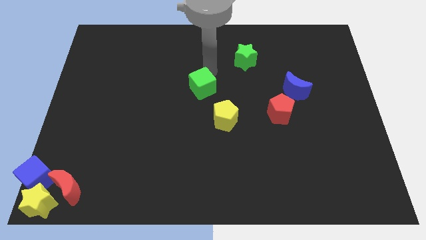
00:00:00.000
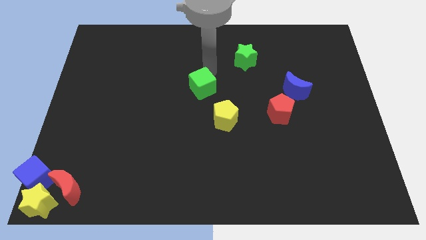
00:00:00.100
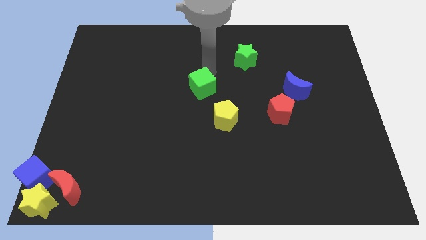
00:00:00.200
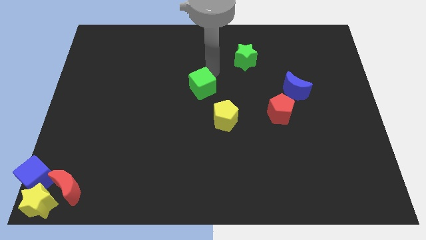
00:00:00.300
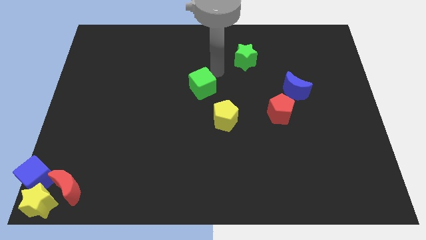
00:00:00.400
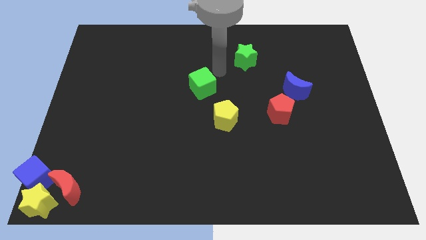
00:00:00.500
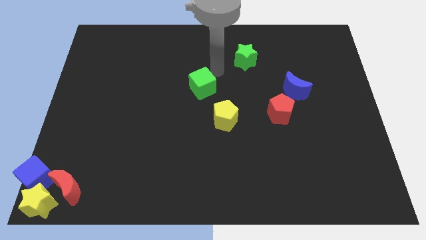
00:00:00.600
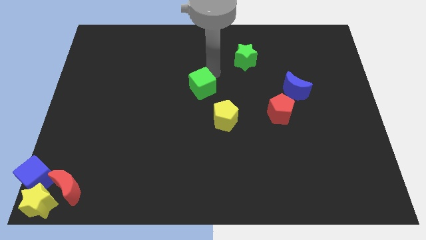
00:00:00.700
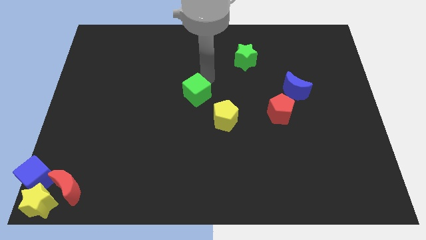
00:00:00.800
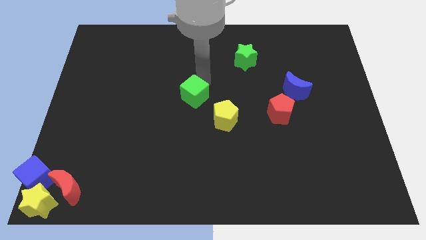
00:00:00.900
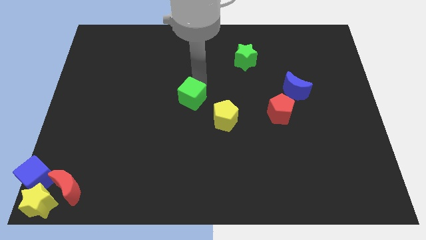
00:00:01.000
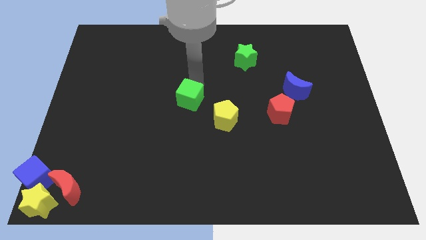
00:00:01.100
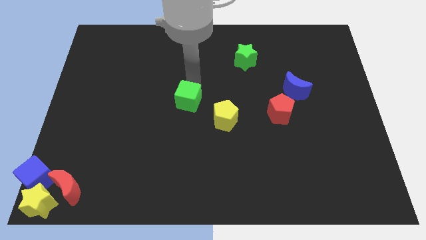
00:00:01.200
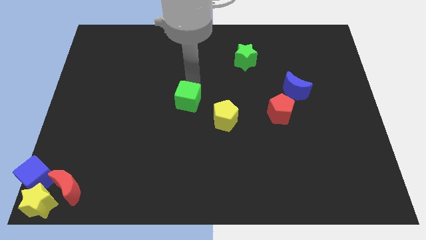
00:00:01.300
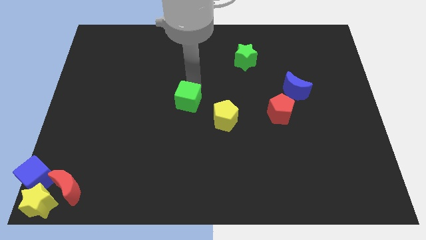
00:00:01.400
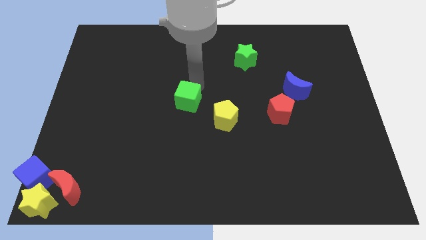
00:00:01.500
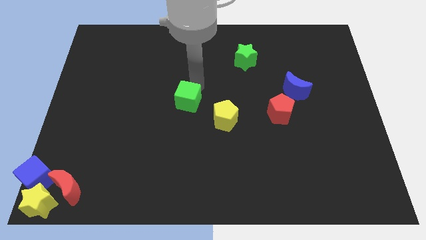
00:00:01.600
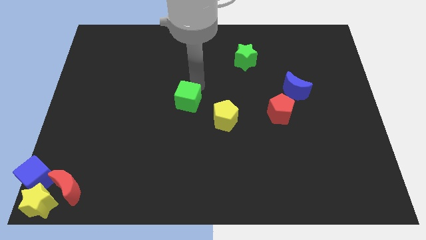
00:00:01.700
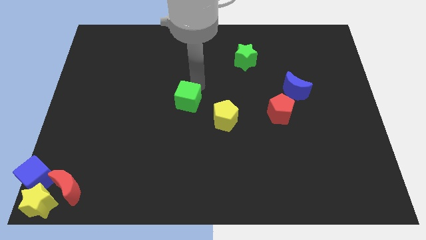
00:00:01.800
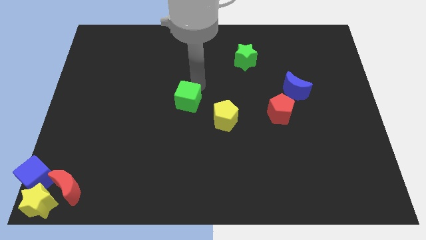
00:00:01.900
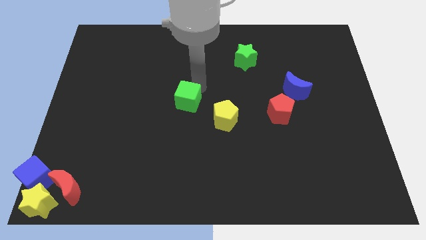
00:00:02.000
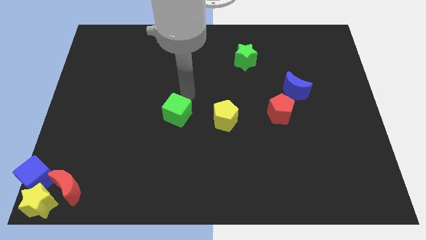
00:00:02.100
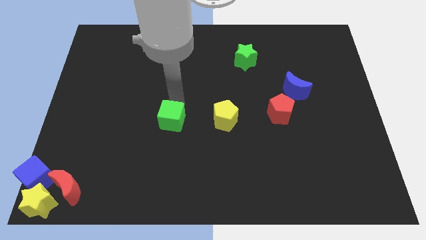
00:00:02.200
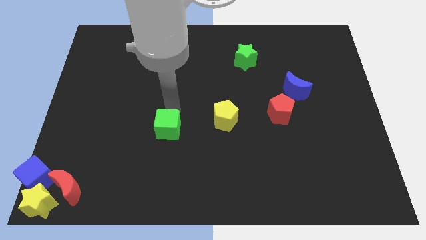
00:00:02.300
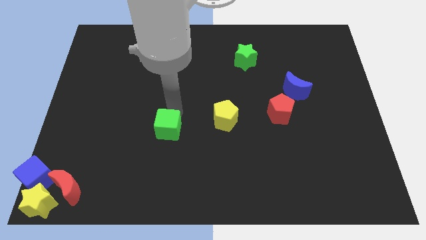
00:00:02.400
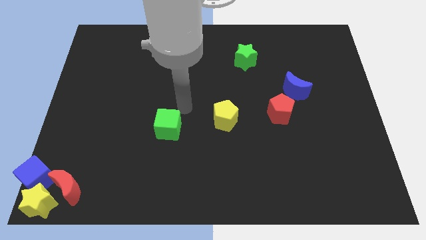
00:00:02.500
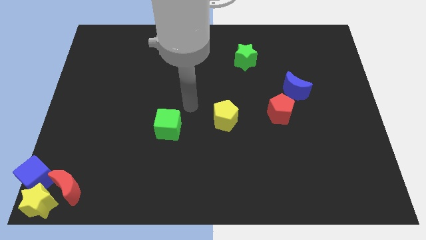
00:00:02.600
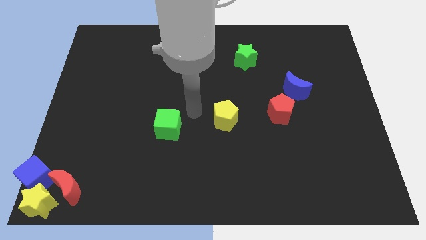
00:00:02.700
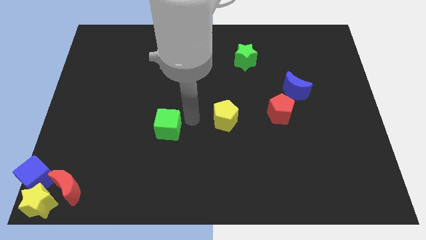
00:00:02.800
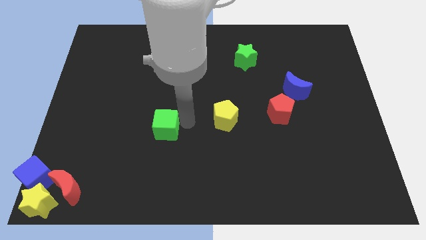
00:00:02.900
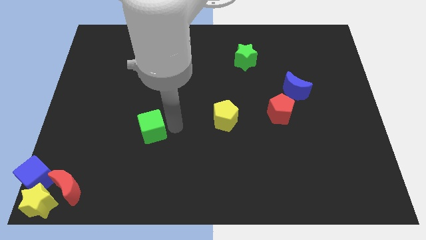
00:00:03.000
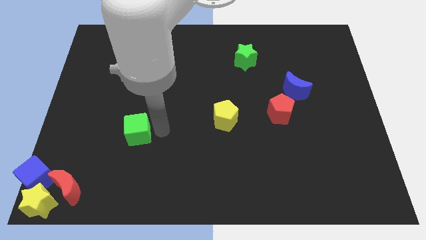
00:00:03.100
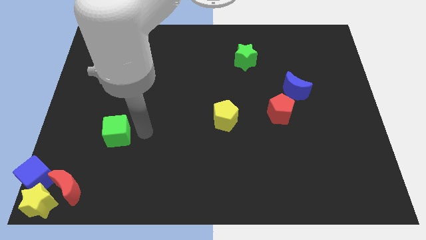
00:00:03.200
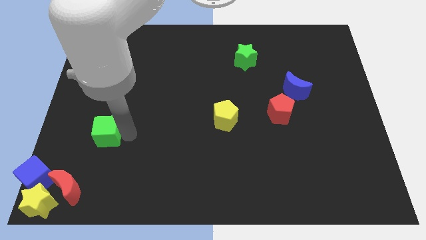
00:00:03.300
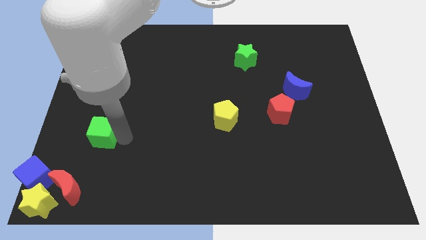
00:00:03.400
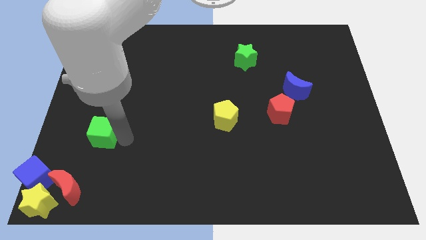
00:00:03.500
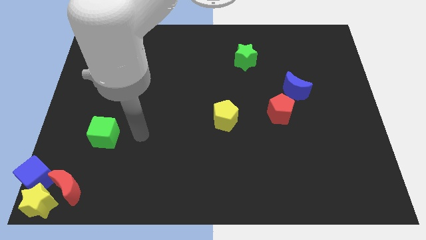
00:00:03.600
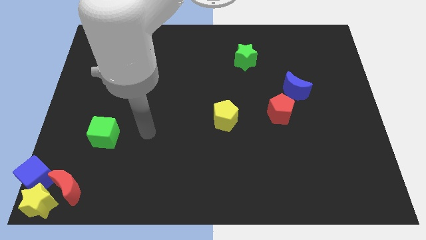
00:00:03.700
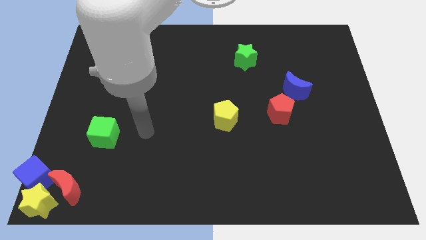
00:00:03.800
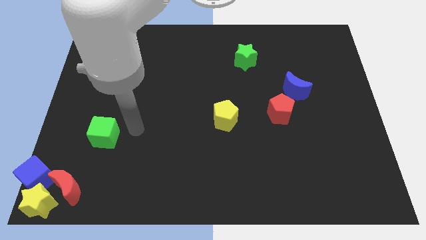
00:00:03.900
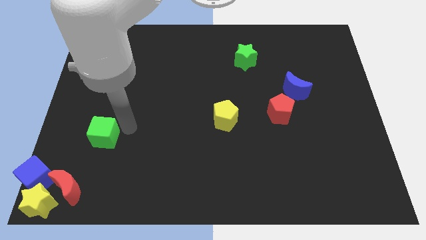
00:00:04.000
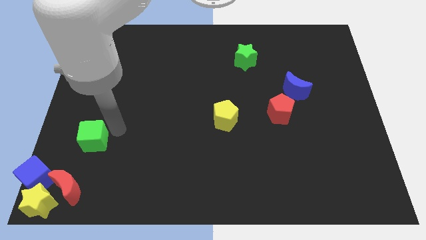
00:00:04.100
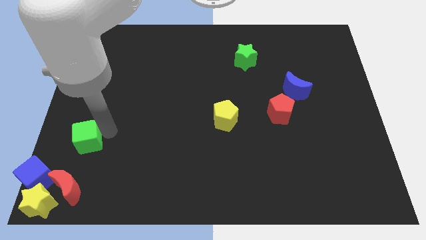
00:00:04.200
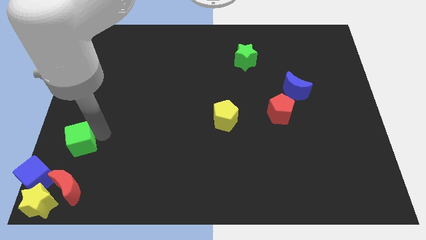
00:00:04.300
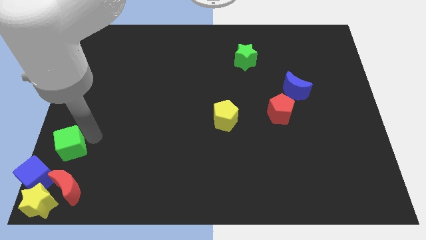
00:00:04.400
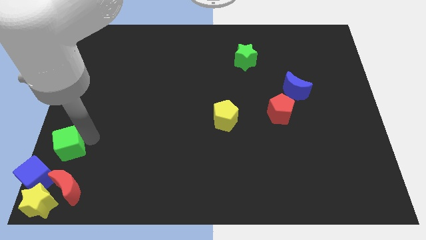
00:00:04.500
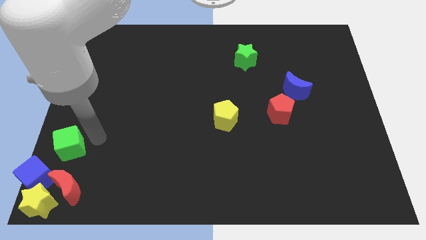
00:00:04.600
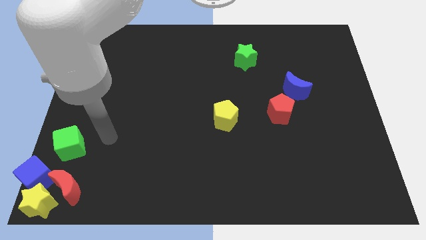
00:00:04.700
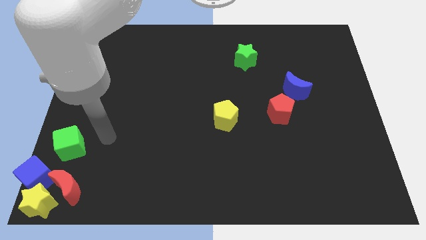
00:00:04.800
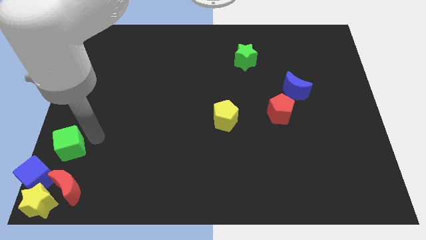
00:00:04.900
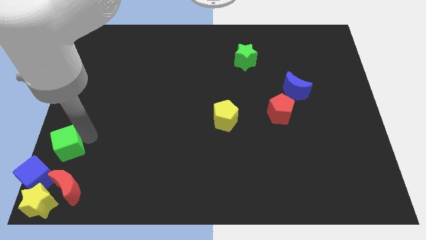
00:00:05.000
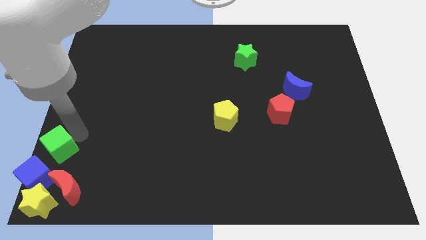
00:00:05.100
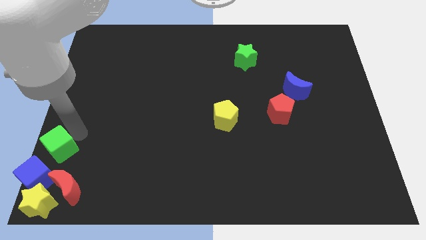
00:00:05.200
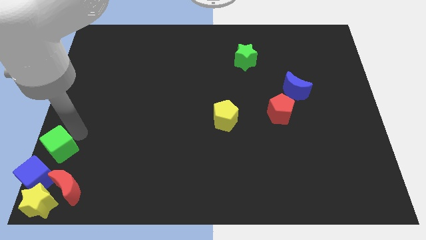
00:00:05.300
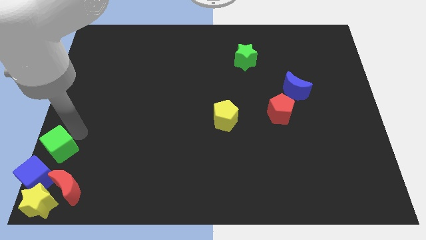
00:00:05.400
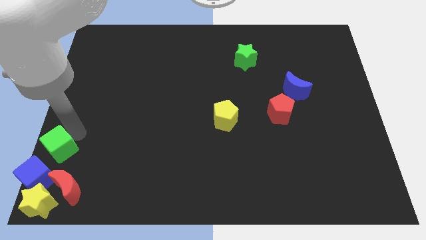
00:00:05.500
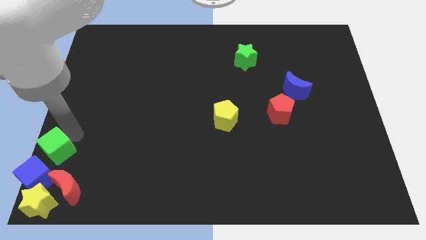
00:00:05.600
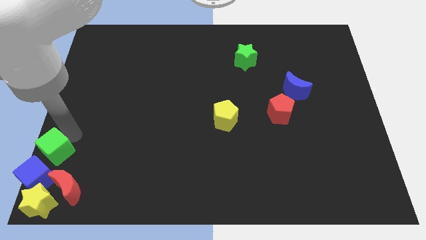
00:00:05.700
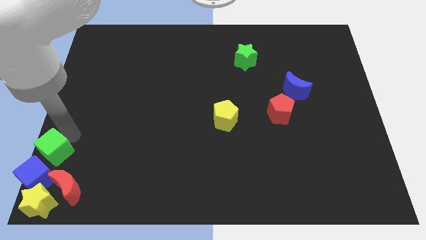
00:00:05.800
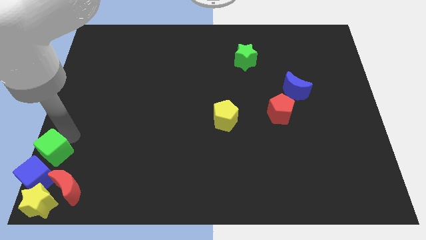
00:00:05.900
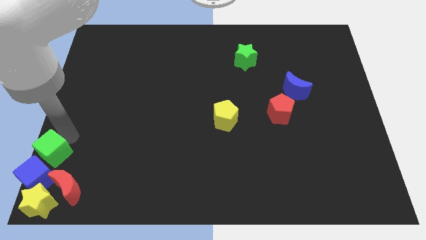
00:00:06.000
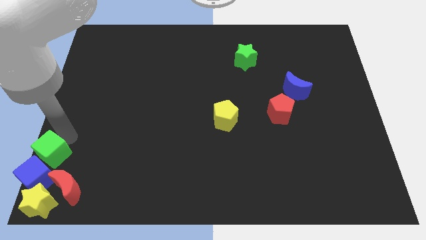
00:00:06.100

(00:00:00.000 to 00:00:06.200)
place the green cube above the blue cube

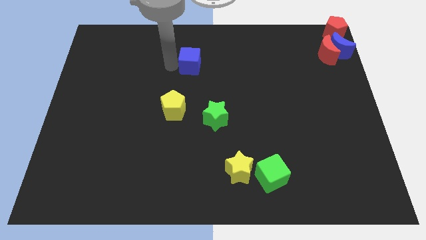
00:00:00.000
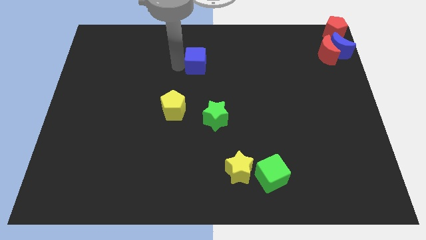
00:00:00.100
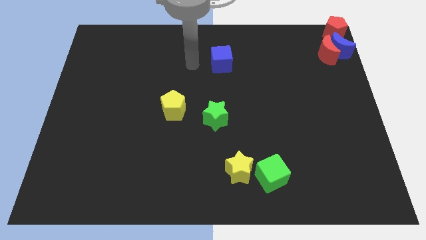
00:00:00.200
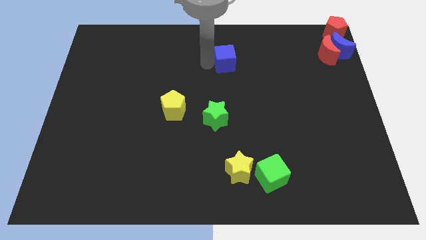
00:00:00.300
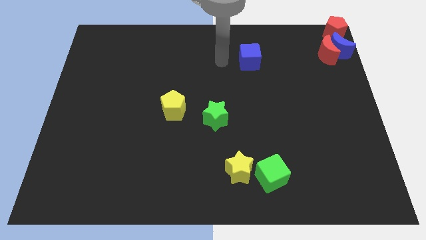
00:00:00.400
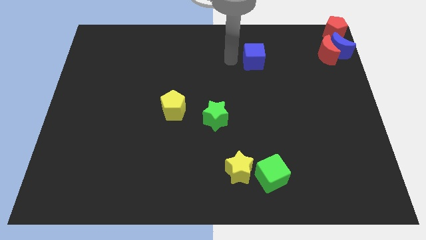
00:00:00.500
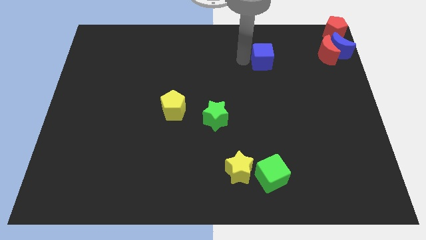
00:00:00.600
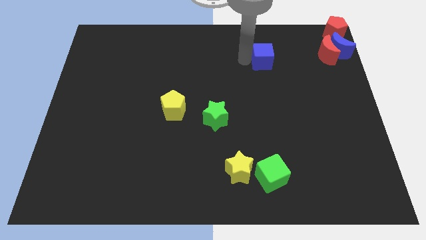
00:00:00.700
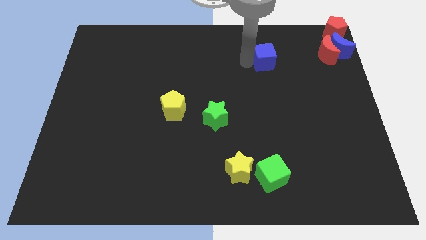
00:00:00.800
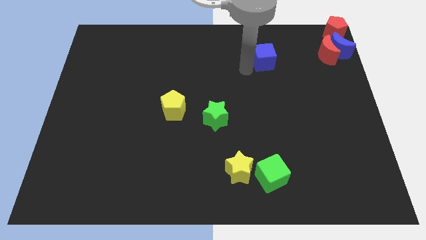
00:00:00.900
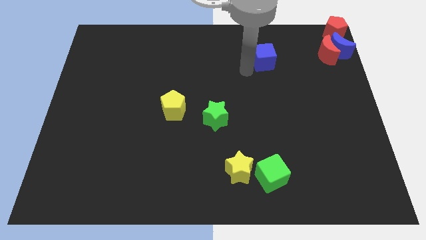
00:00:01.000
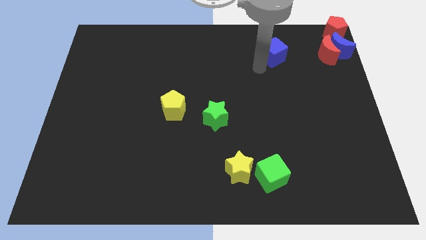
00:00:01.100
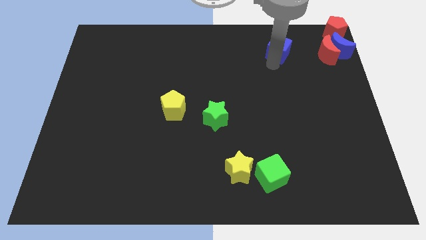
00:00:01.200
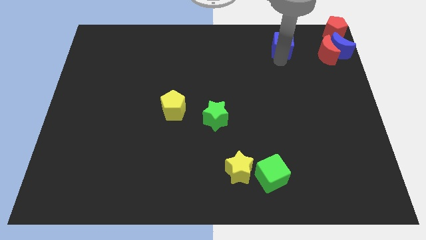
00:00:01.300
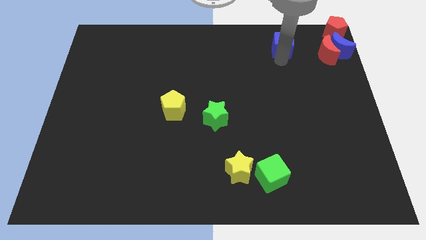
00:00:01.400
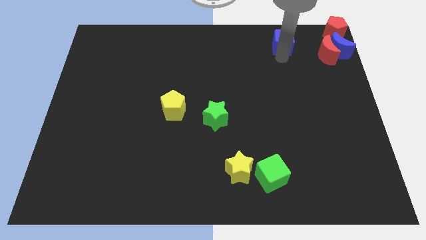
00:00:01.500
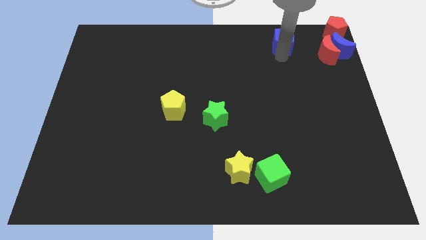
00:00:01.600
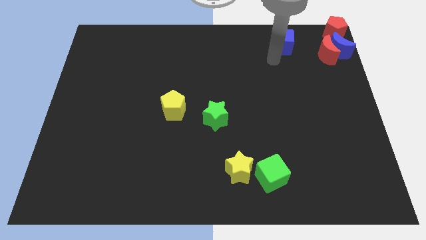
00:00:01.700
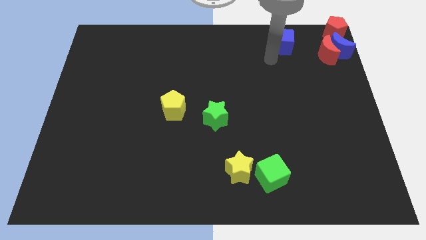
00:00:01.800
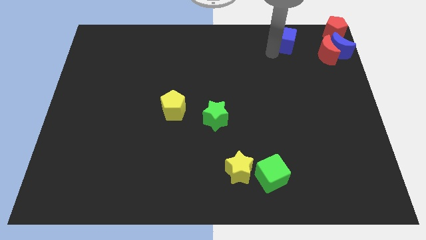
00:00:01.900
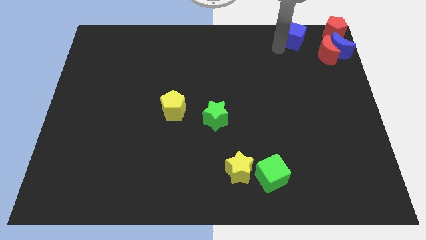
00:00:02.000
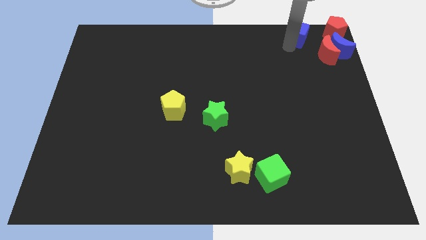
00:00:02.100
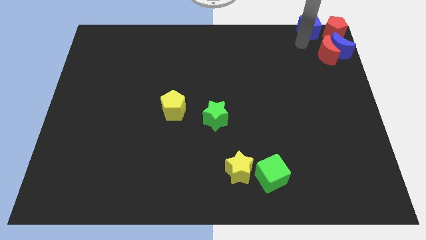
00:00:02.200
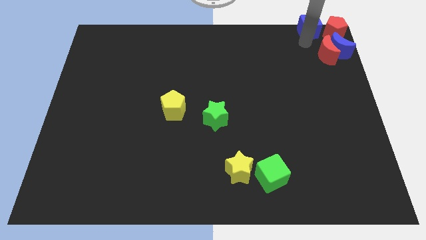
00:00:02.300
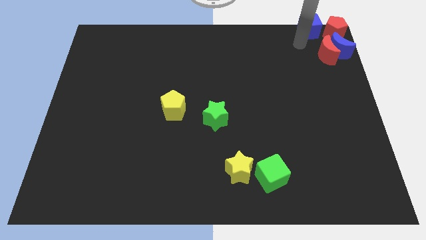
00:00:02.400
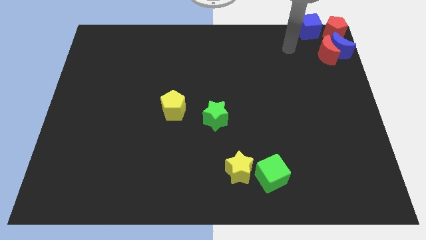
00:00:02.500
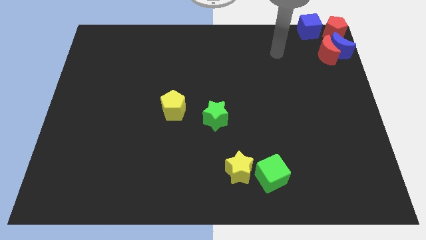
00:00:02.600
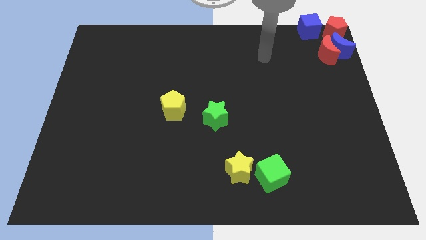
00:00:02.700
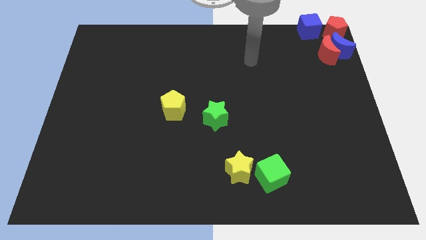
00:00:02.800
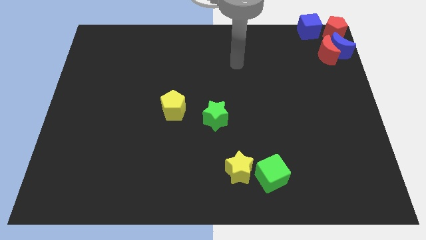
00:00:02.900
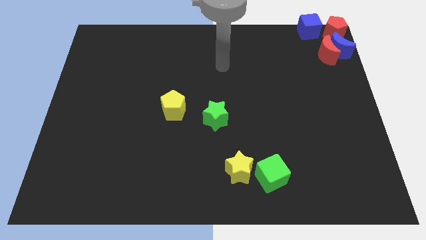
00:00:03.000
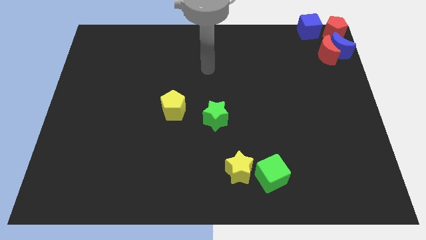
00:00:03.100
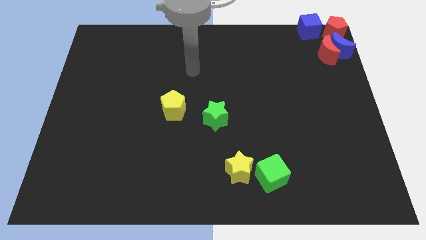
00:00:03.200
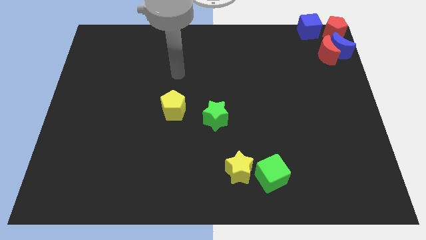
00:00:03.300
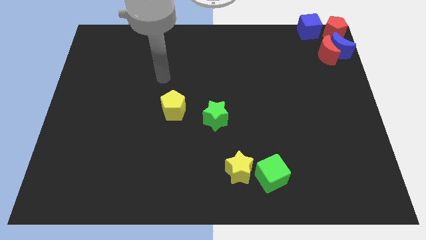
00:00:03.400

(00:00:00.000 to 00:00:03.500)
push the blue cube to the left side of the red pentagon
